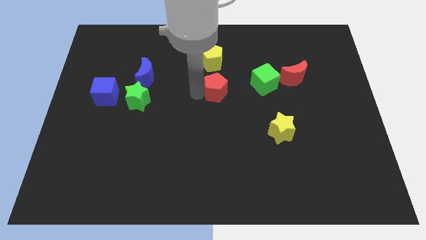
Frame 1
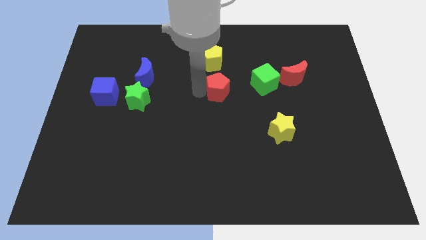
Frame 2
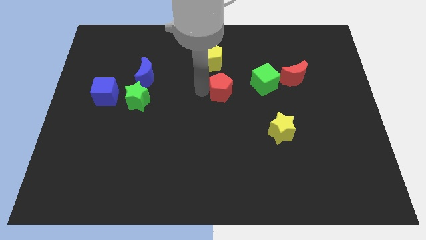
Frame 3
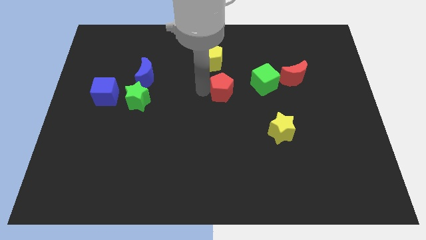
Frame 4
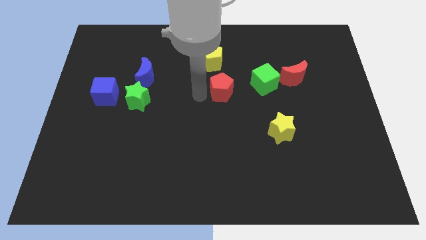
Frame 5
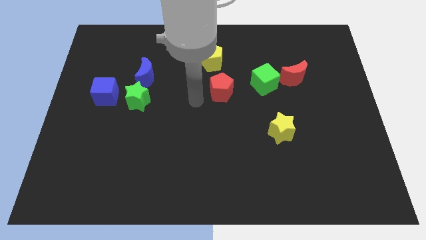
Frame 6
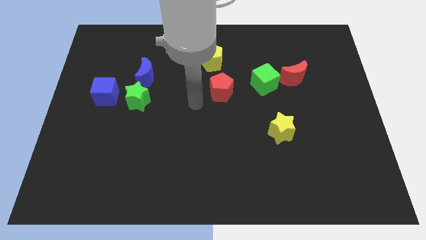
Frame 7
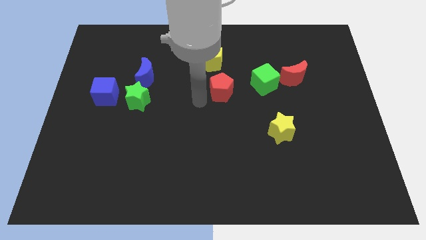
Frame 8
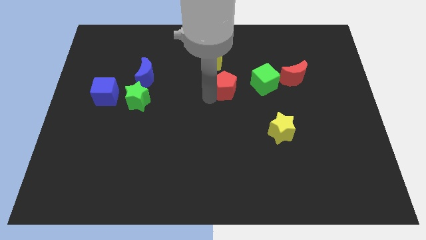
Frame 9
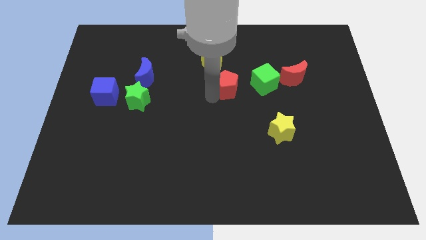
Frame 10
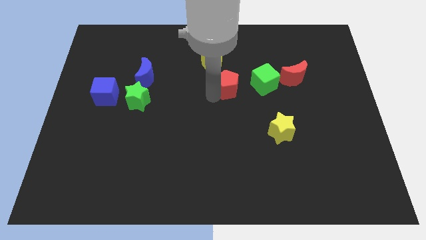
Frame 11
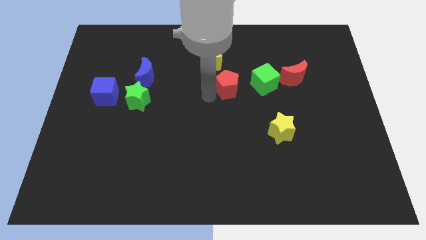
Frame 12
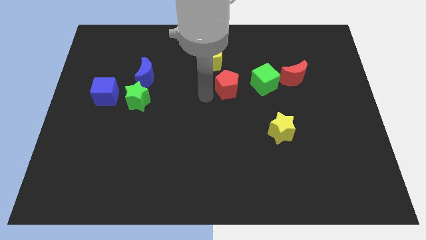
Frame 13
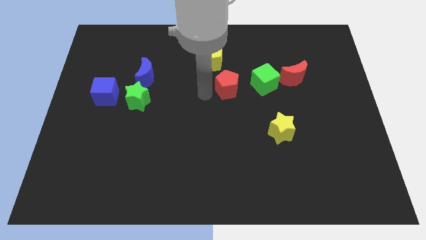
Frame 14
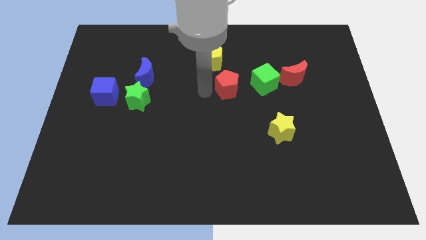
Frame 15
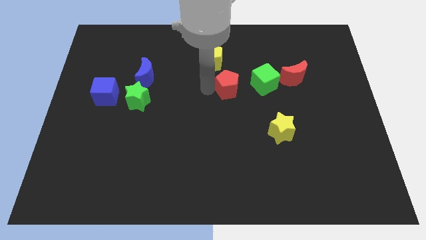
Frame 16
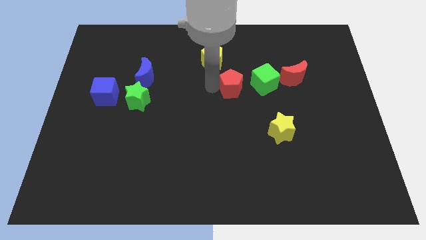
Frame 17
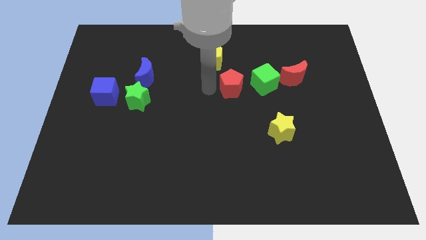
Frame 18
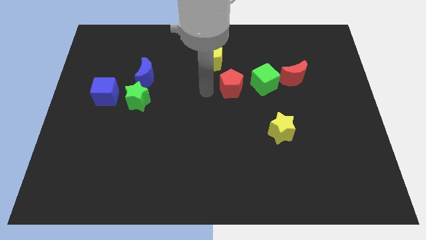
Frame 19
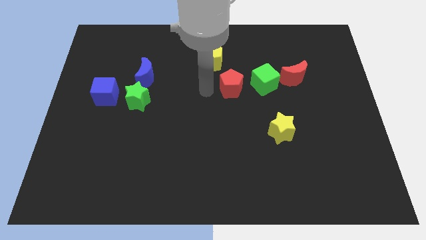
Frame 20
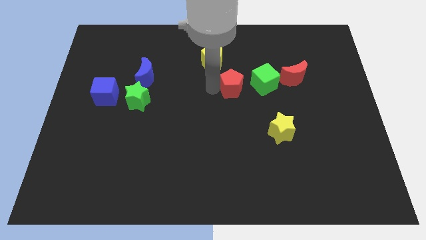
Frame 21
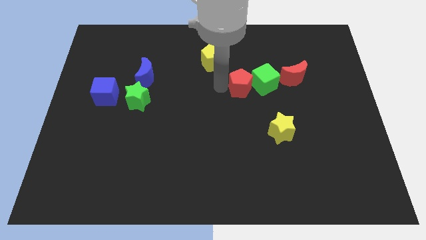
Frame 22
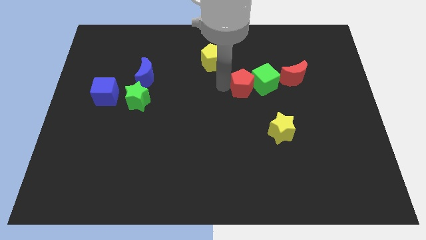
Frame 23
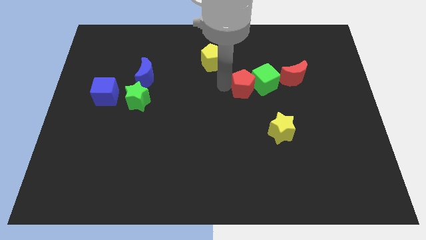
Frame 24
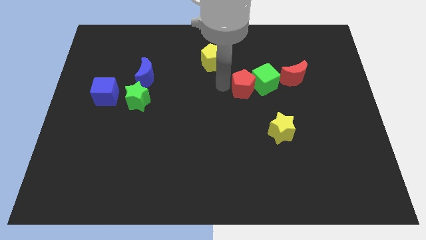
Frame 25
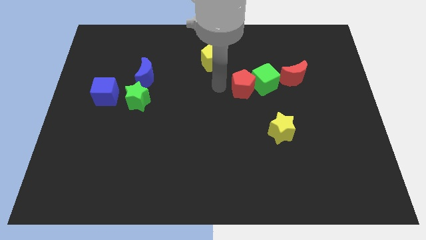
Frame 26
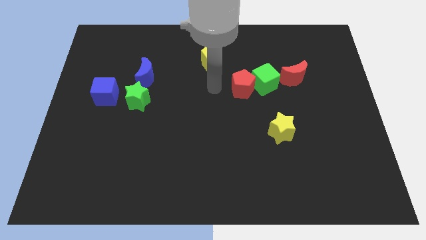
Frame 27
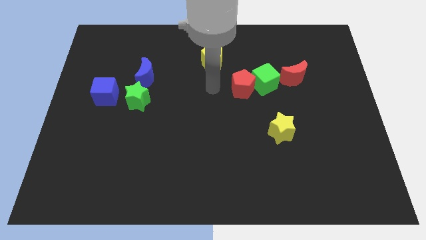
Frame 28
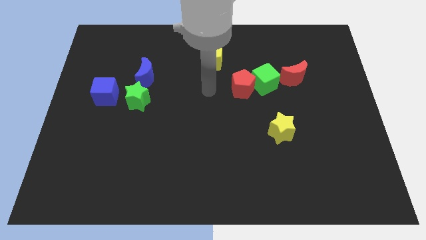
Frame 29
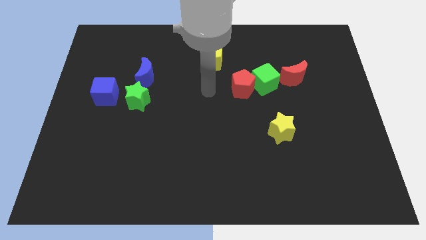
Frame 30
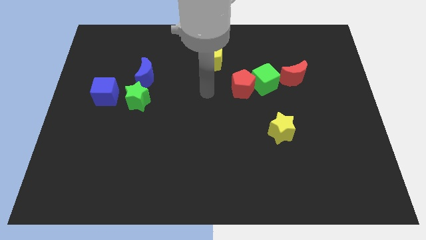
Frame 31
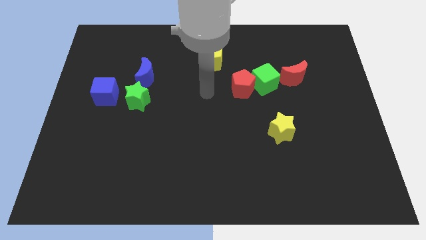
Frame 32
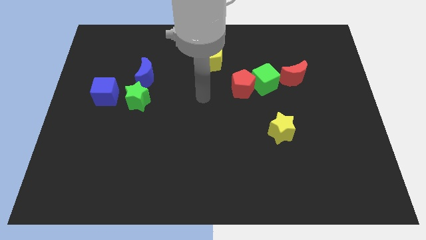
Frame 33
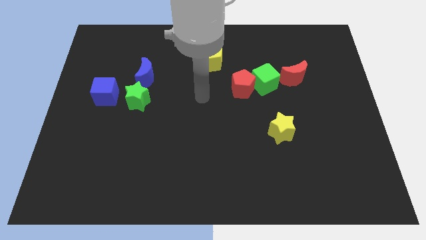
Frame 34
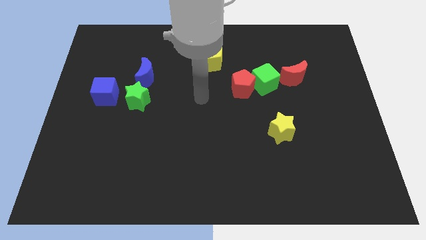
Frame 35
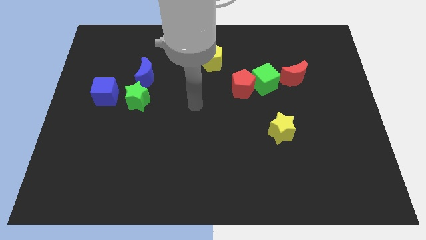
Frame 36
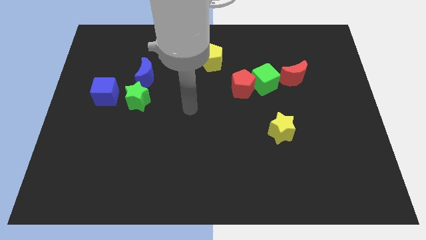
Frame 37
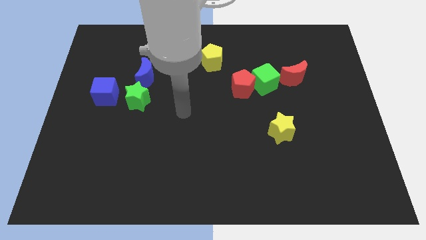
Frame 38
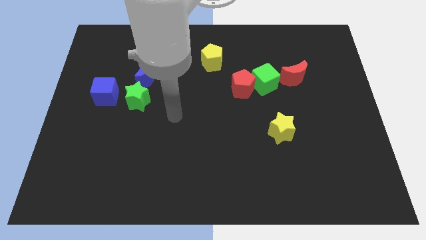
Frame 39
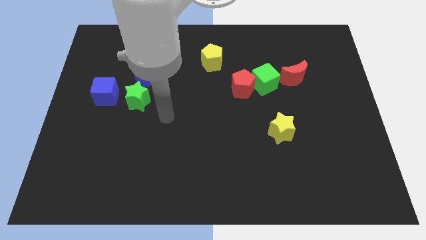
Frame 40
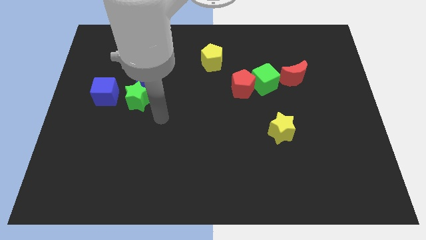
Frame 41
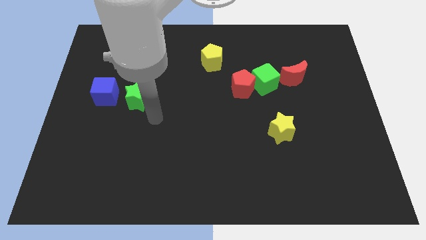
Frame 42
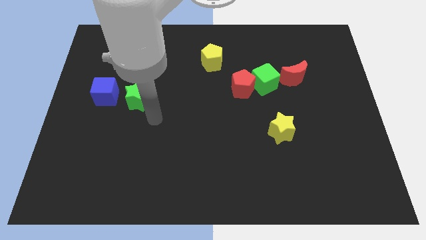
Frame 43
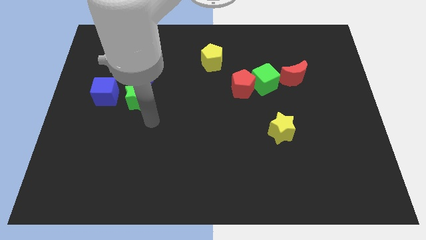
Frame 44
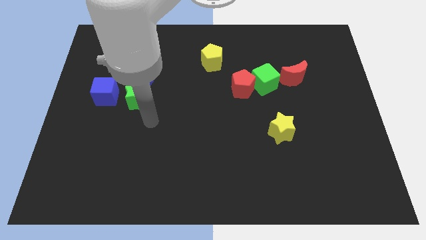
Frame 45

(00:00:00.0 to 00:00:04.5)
place the red pentagon left to the green cube to form a diagonal line

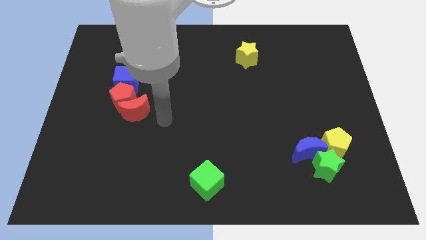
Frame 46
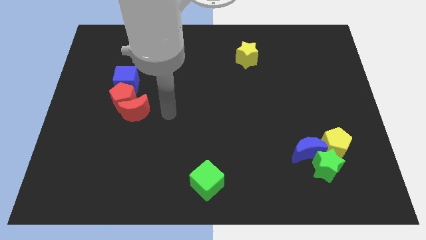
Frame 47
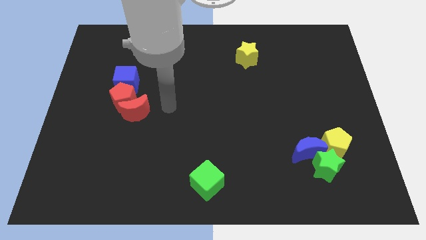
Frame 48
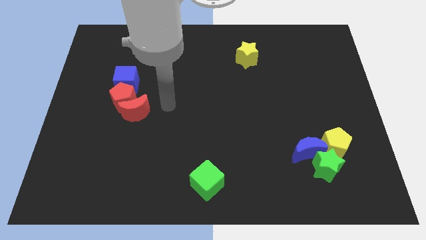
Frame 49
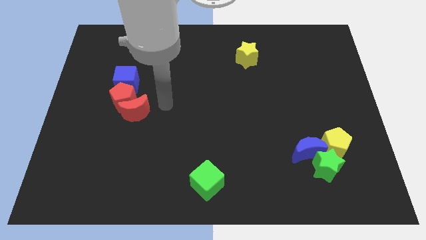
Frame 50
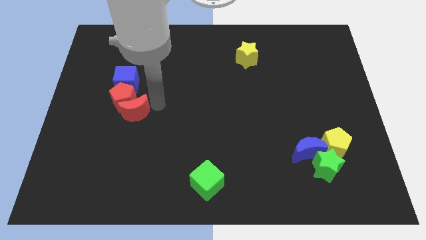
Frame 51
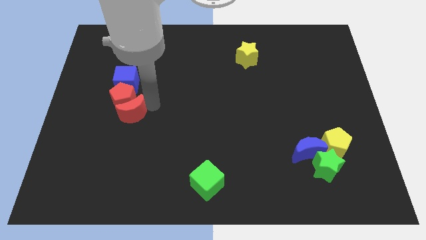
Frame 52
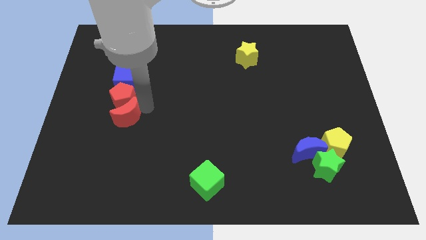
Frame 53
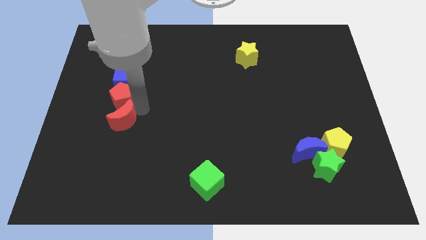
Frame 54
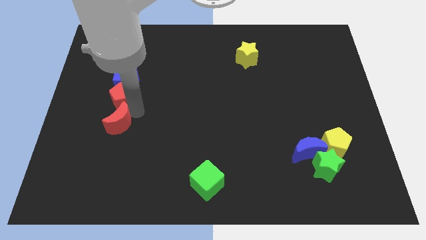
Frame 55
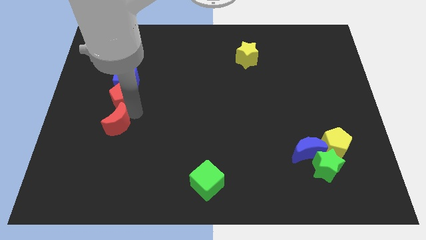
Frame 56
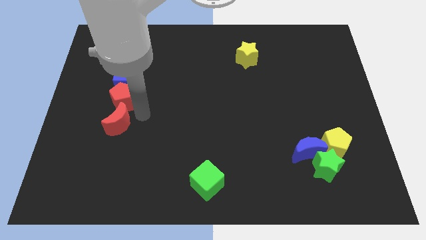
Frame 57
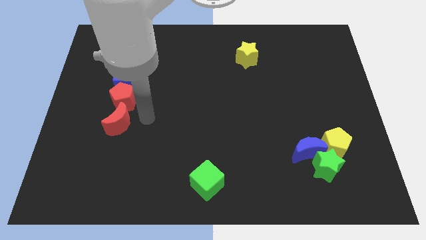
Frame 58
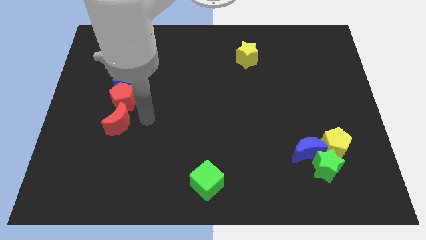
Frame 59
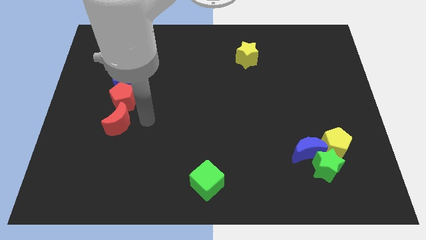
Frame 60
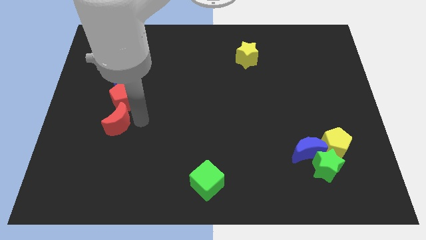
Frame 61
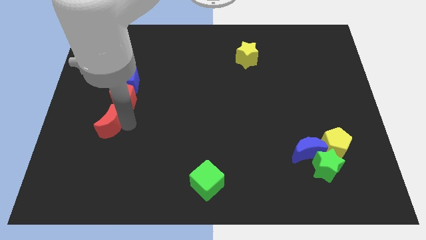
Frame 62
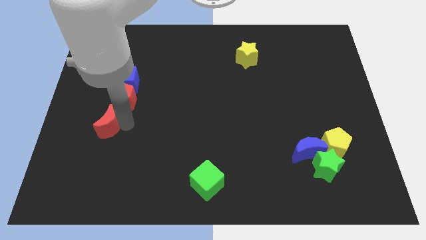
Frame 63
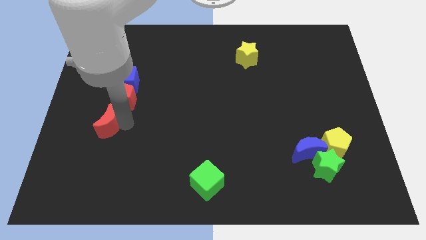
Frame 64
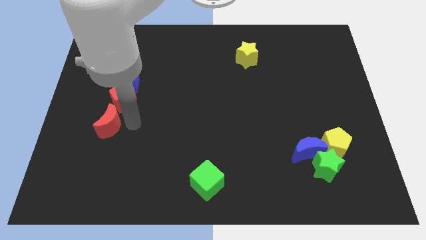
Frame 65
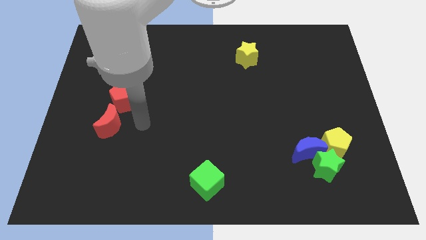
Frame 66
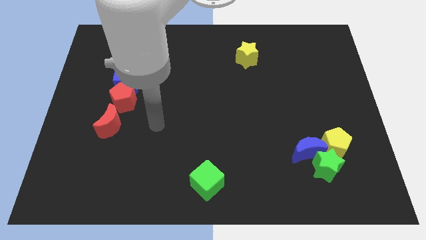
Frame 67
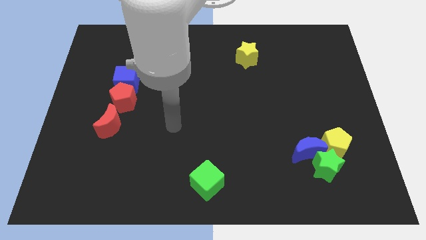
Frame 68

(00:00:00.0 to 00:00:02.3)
separate the red moon and red pentagon

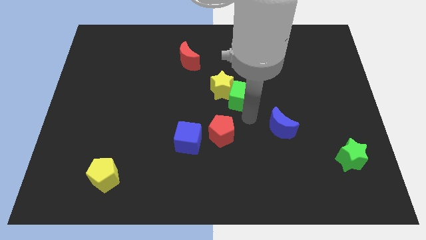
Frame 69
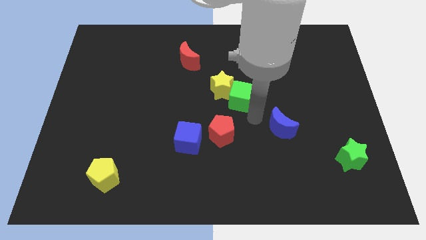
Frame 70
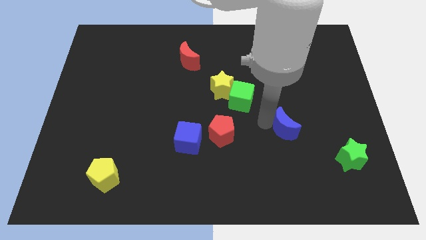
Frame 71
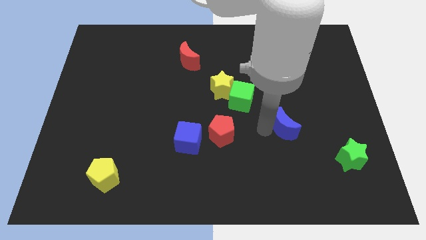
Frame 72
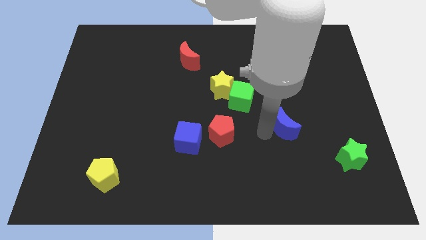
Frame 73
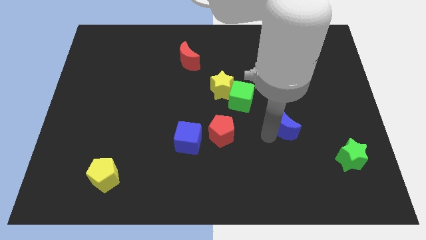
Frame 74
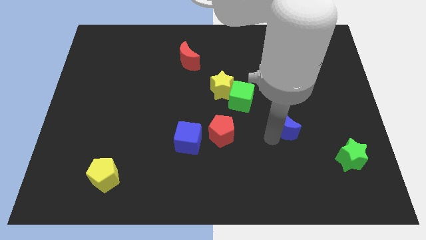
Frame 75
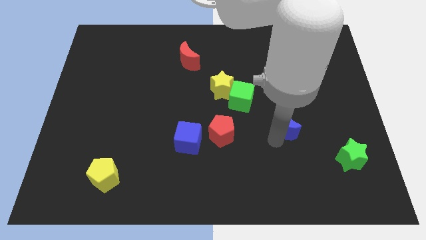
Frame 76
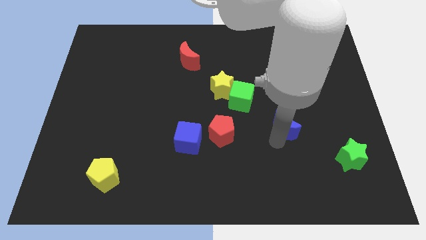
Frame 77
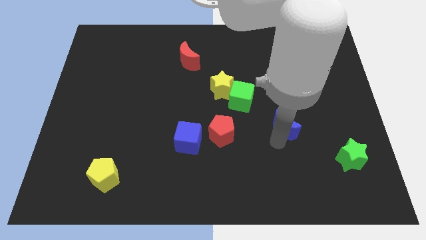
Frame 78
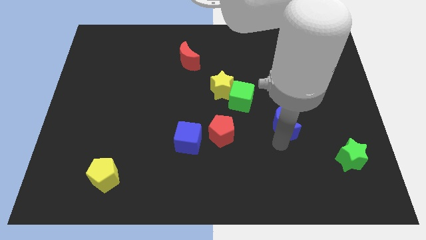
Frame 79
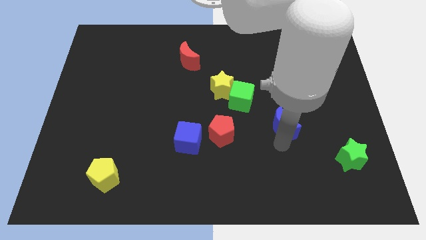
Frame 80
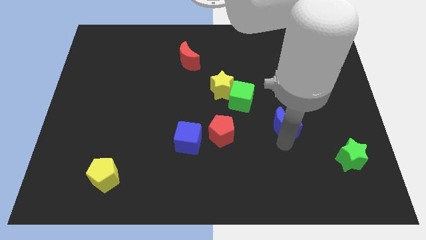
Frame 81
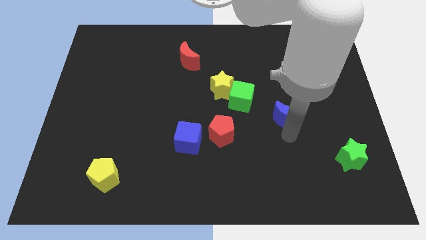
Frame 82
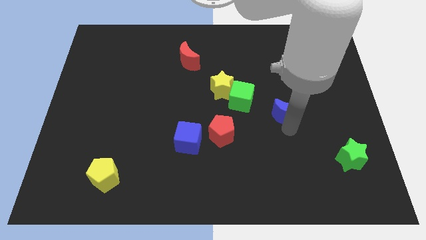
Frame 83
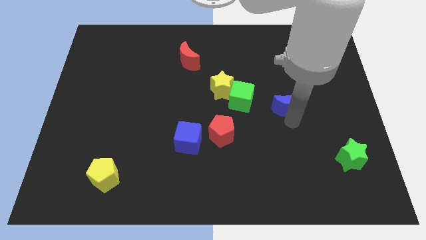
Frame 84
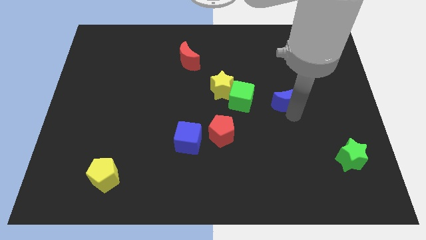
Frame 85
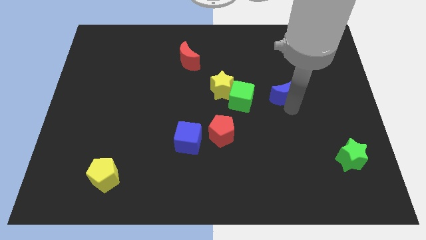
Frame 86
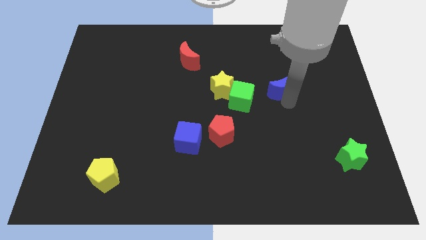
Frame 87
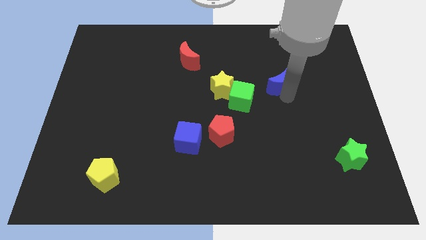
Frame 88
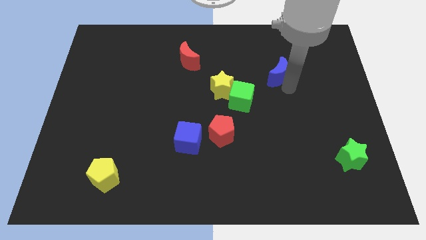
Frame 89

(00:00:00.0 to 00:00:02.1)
move the blue crescent towards the top
